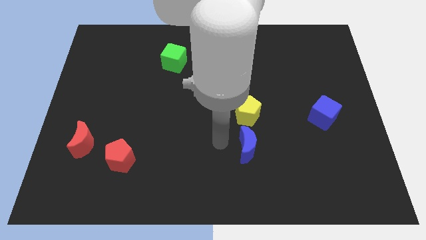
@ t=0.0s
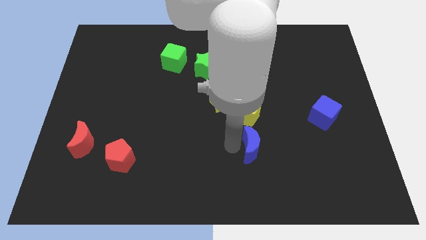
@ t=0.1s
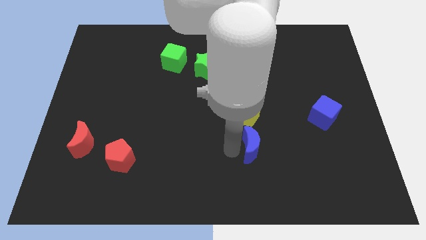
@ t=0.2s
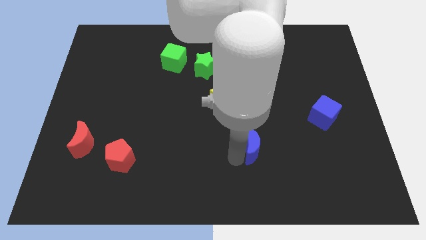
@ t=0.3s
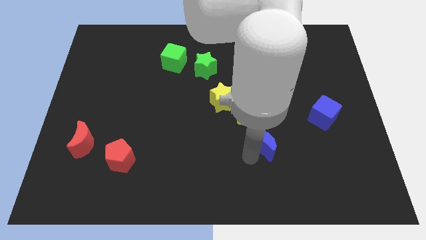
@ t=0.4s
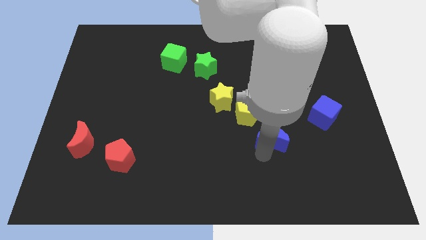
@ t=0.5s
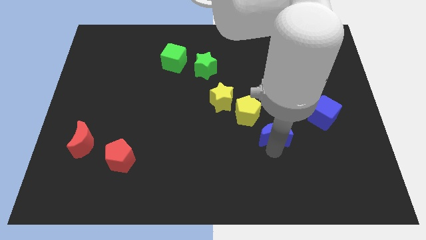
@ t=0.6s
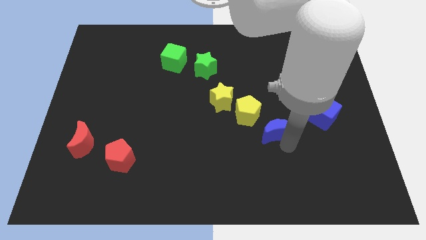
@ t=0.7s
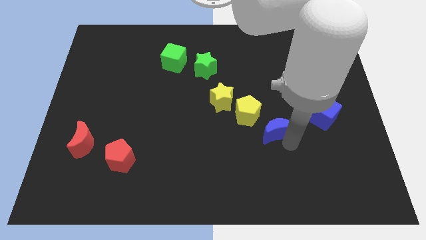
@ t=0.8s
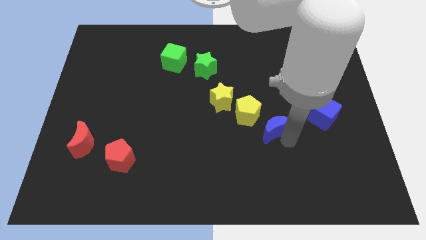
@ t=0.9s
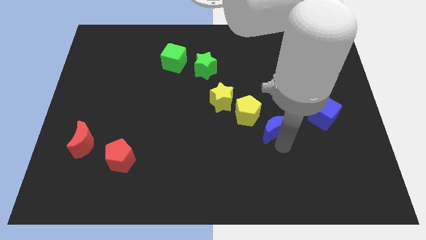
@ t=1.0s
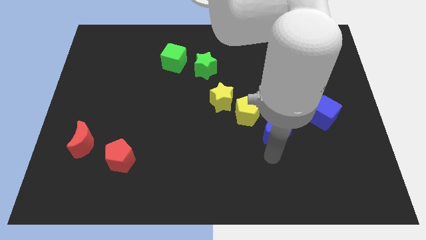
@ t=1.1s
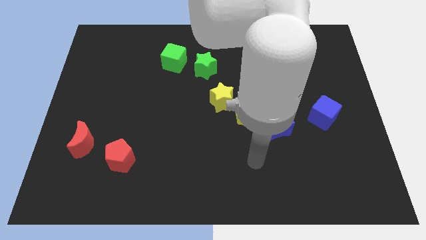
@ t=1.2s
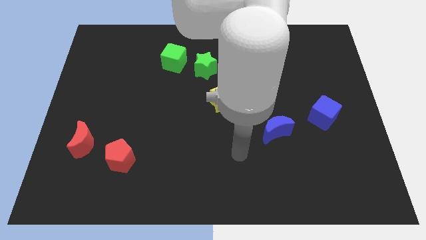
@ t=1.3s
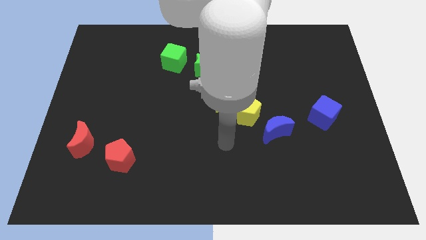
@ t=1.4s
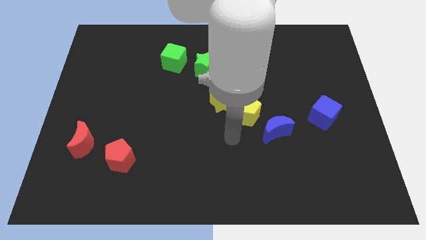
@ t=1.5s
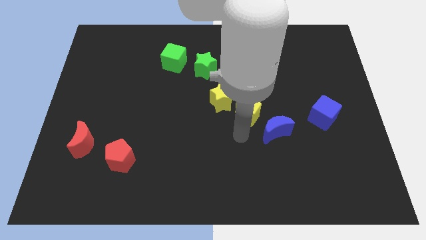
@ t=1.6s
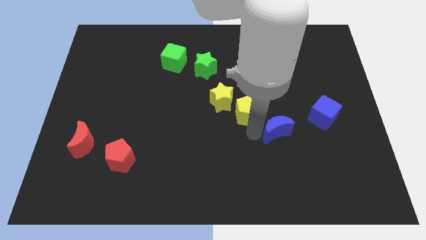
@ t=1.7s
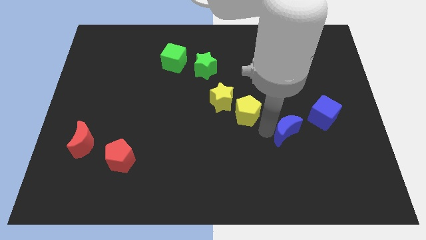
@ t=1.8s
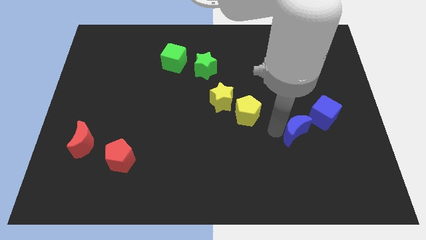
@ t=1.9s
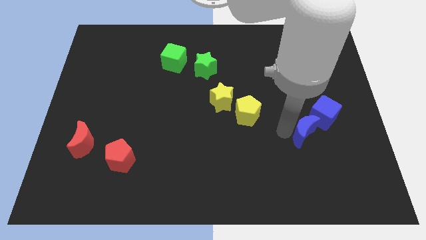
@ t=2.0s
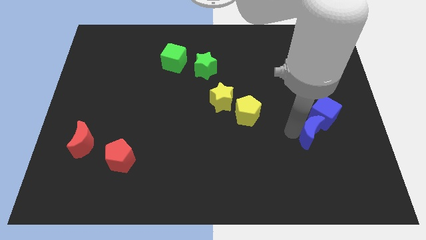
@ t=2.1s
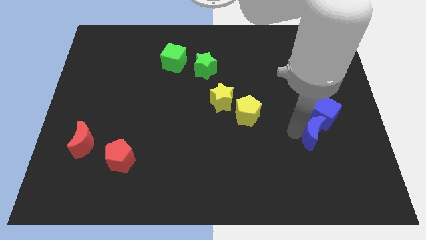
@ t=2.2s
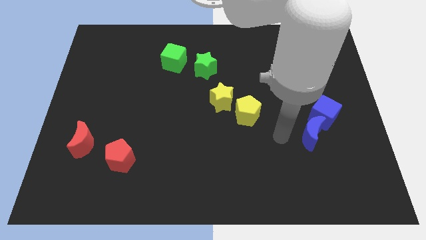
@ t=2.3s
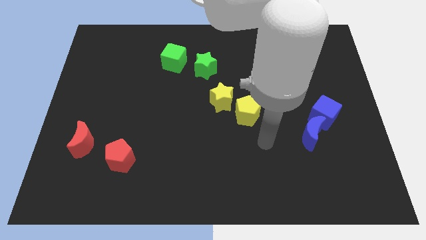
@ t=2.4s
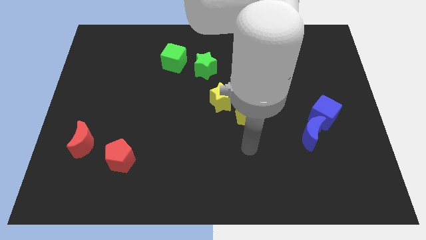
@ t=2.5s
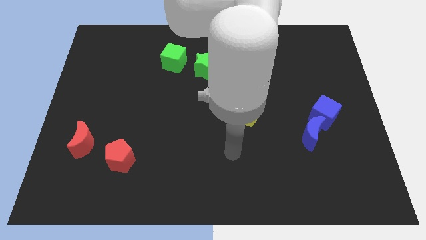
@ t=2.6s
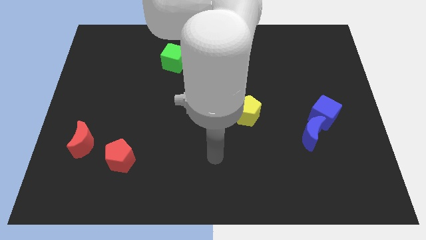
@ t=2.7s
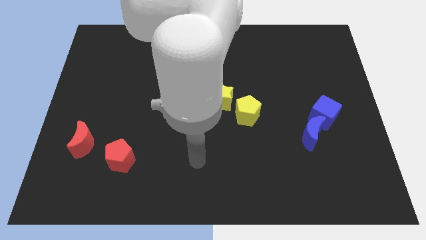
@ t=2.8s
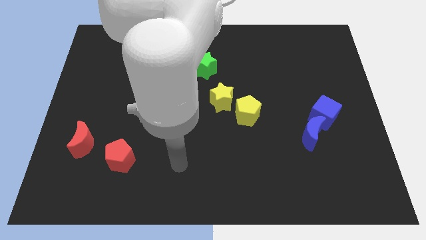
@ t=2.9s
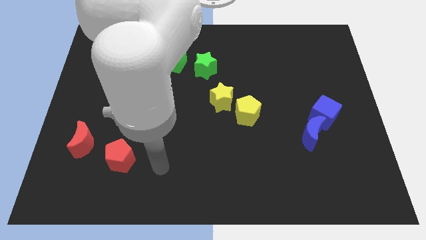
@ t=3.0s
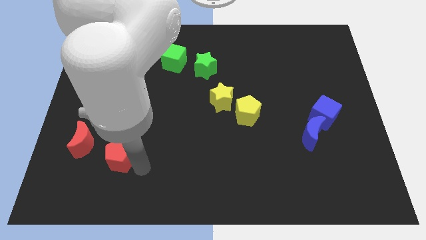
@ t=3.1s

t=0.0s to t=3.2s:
move blue crescent to the blue cube

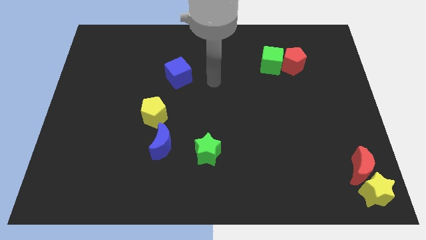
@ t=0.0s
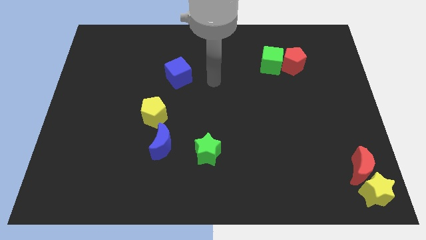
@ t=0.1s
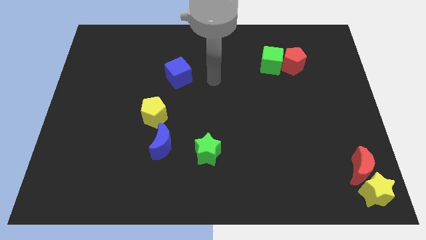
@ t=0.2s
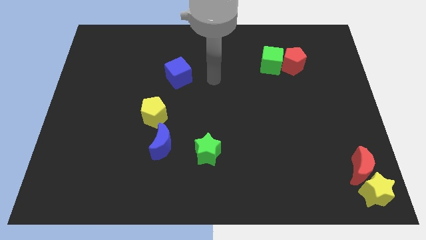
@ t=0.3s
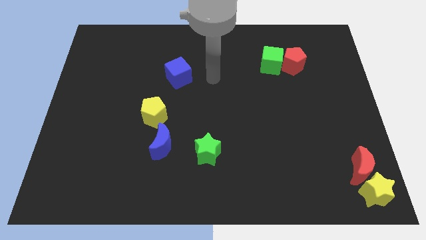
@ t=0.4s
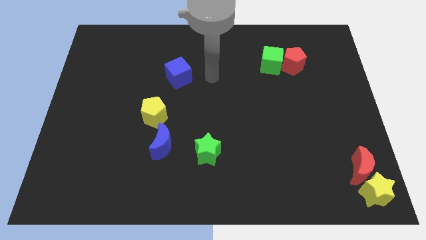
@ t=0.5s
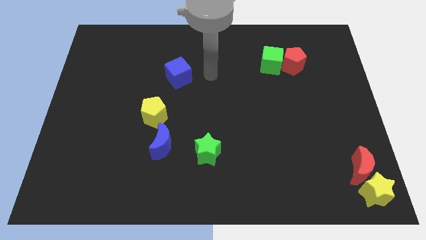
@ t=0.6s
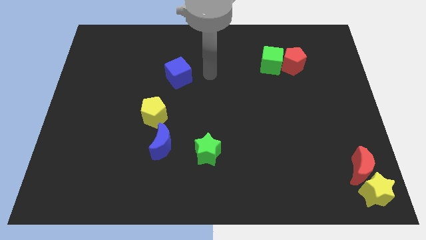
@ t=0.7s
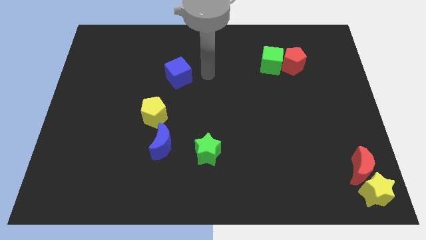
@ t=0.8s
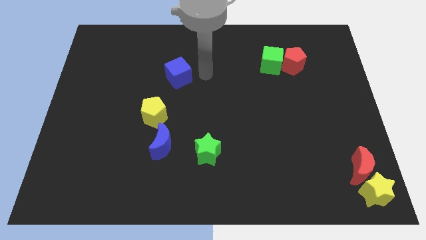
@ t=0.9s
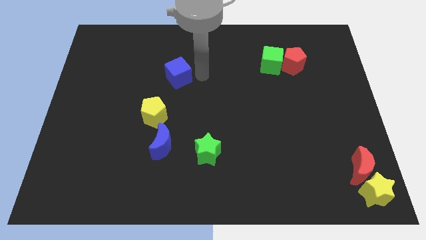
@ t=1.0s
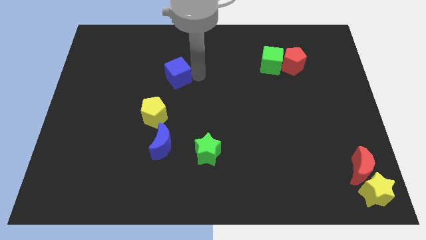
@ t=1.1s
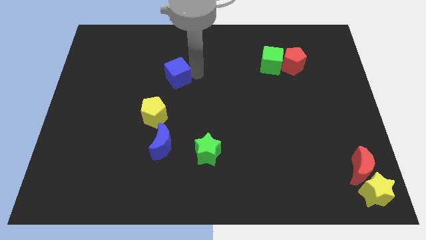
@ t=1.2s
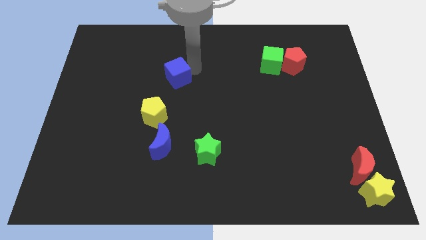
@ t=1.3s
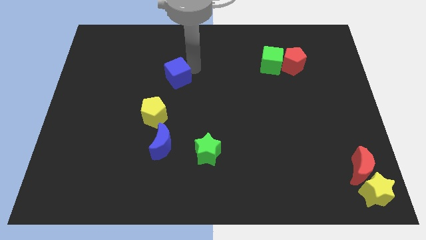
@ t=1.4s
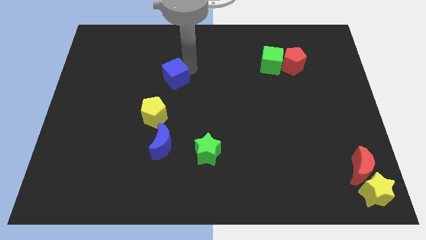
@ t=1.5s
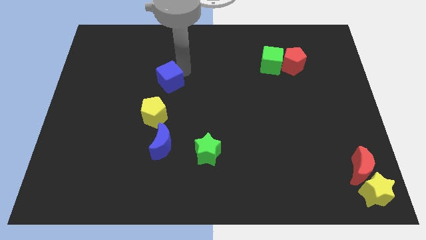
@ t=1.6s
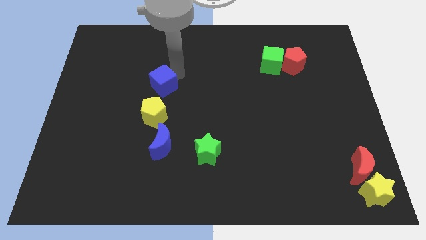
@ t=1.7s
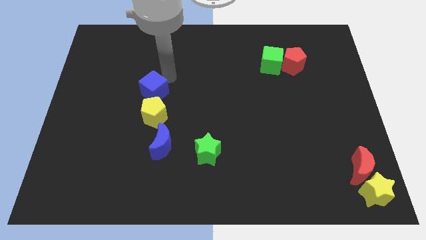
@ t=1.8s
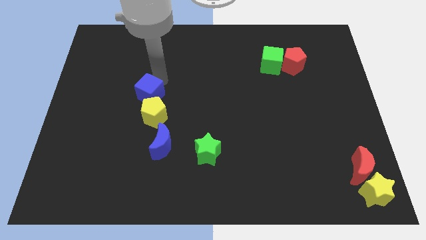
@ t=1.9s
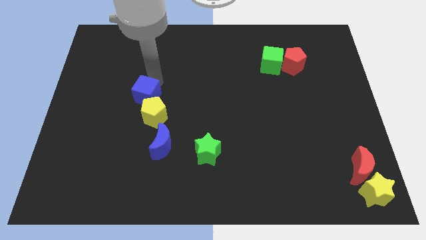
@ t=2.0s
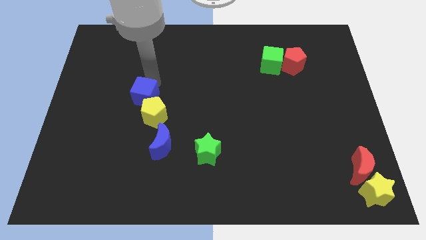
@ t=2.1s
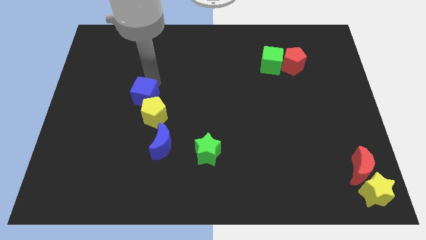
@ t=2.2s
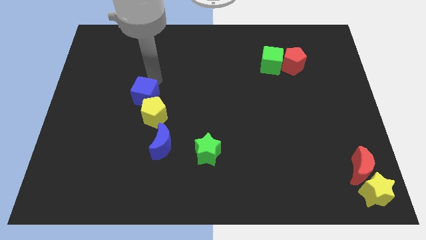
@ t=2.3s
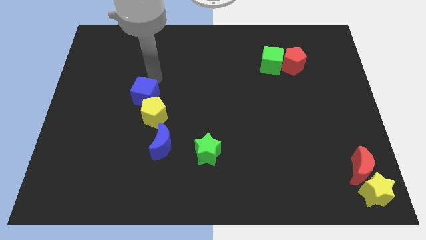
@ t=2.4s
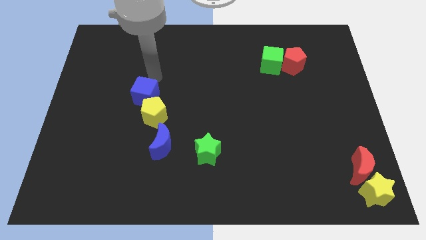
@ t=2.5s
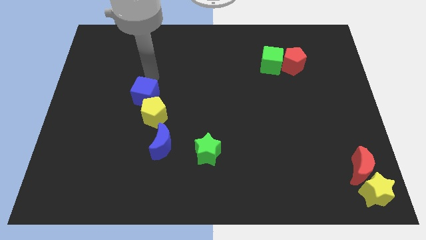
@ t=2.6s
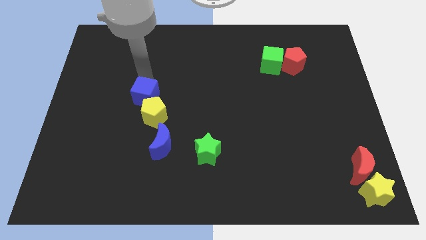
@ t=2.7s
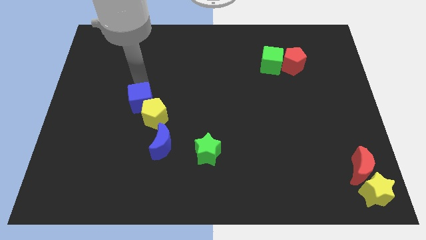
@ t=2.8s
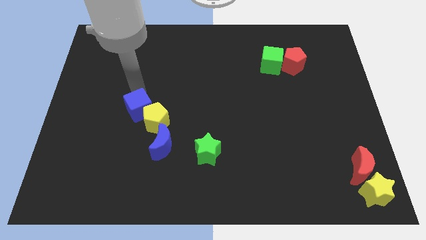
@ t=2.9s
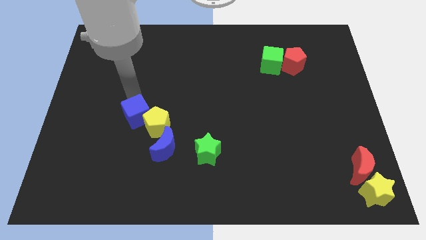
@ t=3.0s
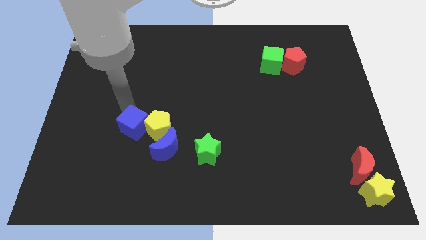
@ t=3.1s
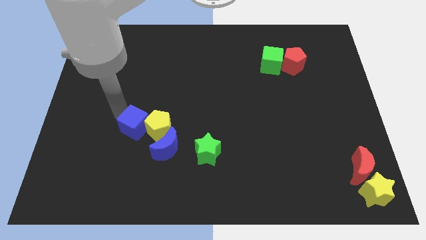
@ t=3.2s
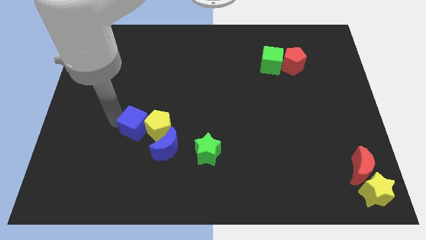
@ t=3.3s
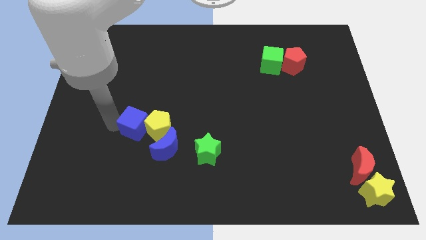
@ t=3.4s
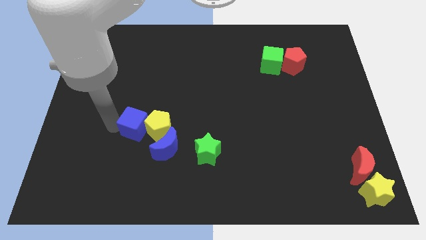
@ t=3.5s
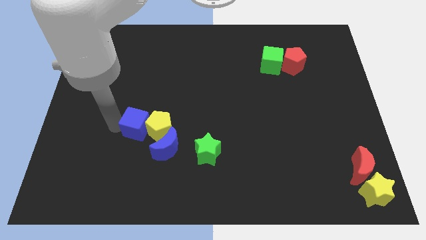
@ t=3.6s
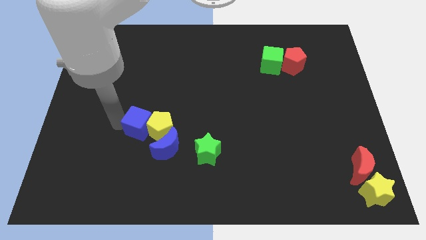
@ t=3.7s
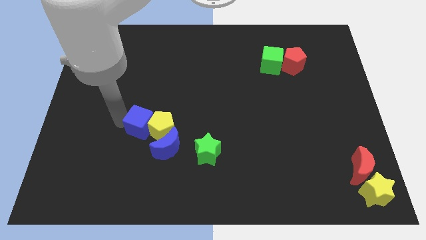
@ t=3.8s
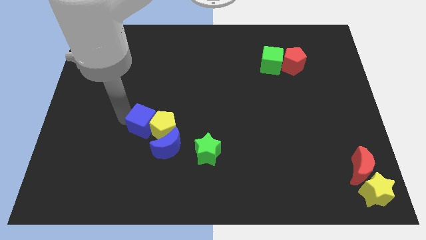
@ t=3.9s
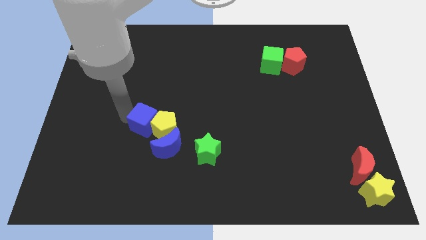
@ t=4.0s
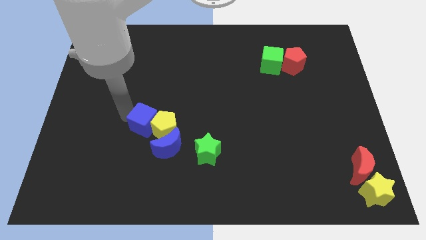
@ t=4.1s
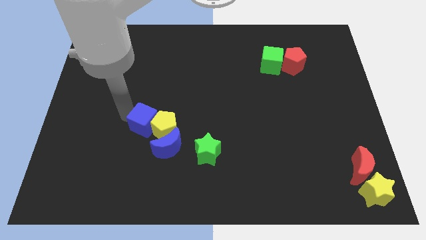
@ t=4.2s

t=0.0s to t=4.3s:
move the blue cube into yellow pentagon

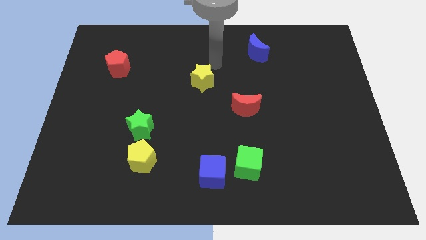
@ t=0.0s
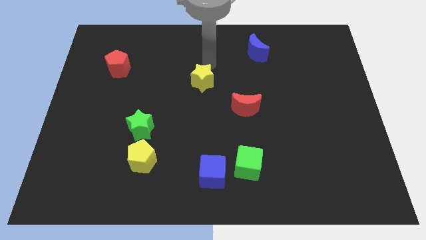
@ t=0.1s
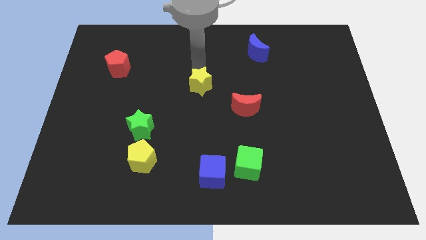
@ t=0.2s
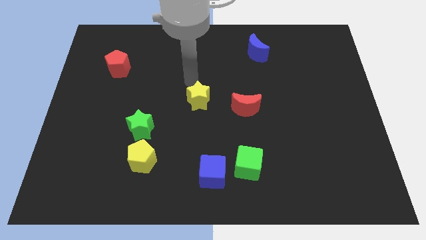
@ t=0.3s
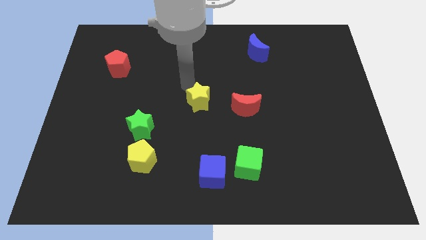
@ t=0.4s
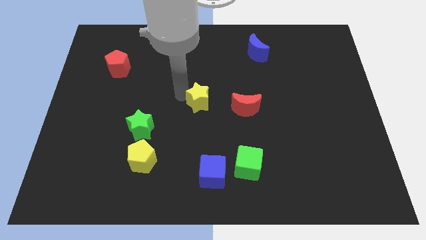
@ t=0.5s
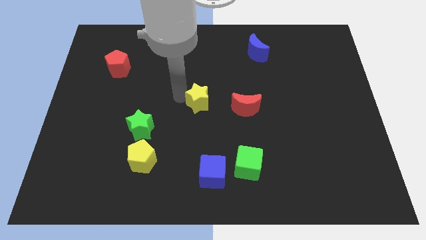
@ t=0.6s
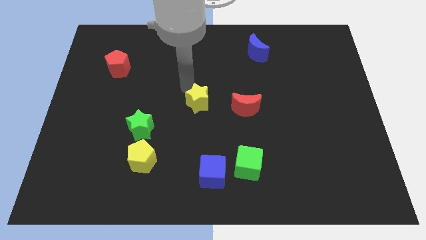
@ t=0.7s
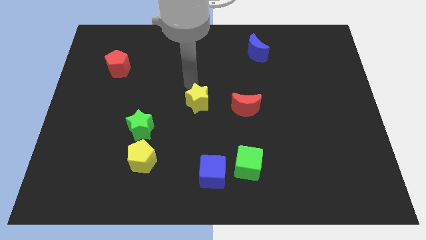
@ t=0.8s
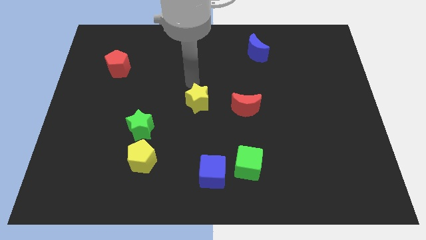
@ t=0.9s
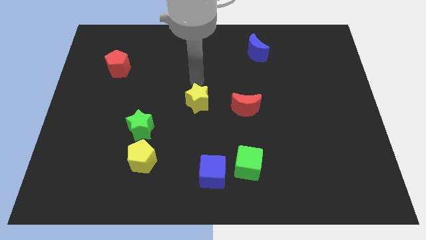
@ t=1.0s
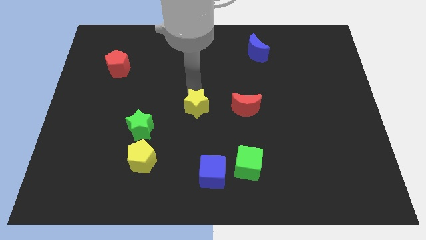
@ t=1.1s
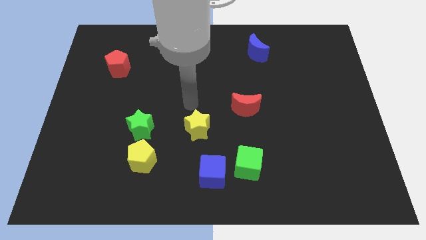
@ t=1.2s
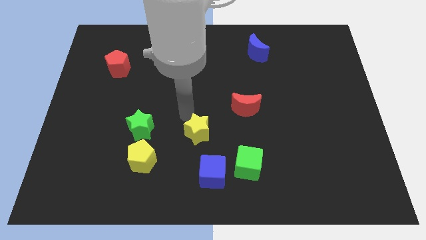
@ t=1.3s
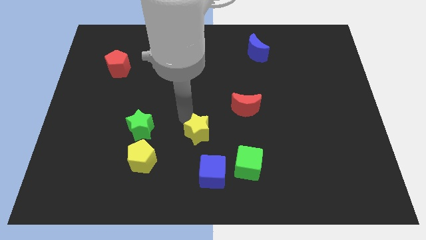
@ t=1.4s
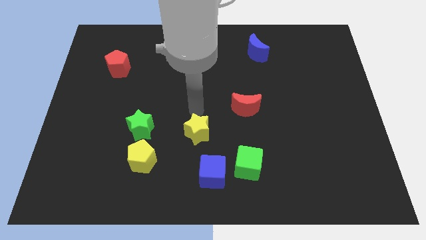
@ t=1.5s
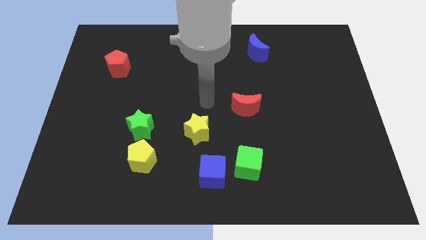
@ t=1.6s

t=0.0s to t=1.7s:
push the yellow star towards the bottom of the board
